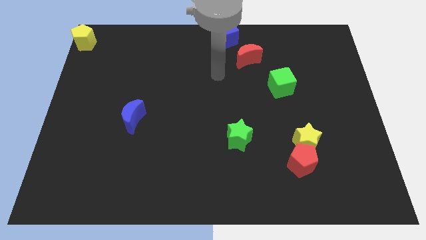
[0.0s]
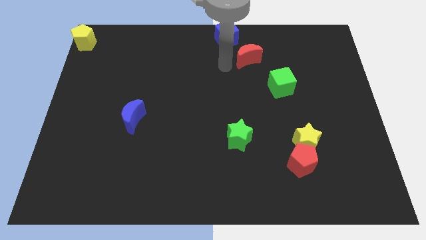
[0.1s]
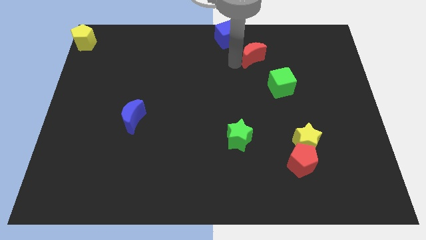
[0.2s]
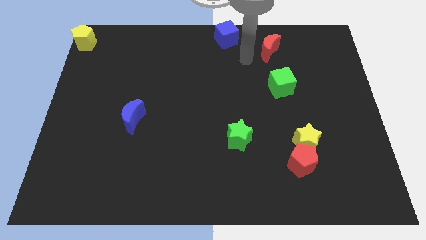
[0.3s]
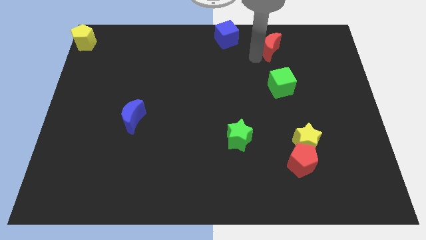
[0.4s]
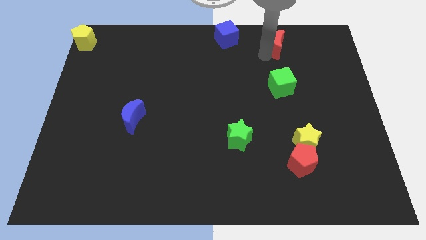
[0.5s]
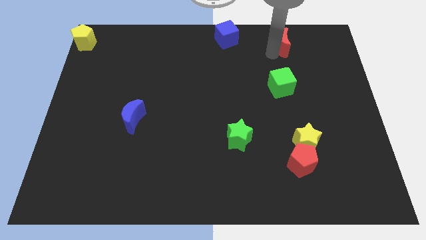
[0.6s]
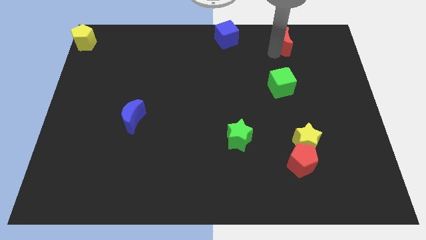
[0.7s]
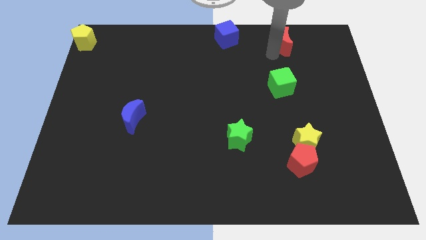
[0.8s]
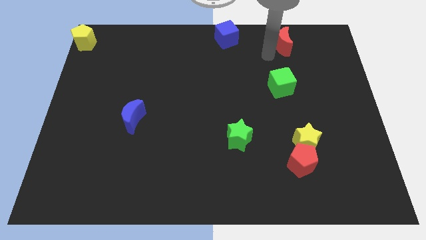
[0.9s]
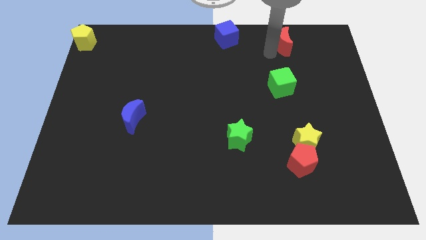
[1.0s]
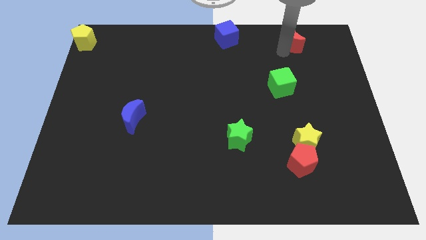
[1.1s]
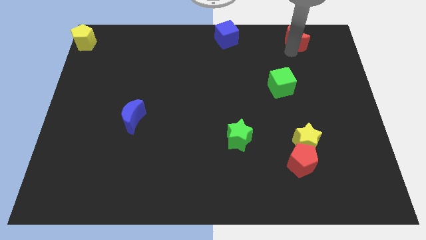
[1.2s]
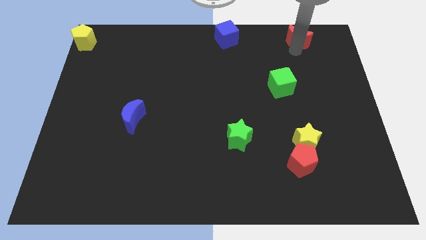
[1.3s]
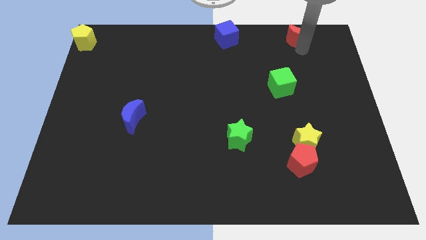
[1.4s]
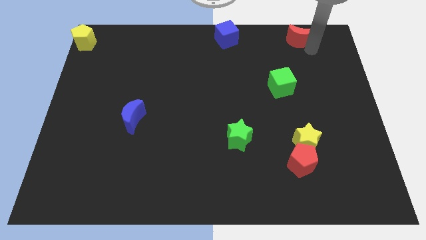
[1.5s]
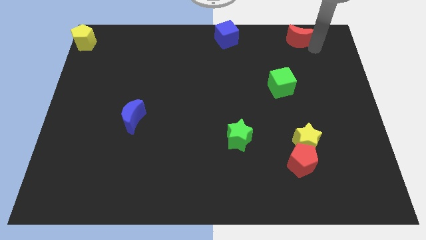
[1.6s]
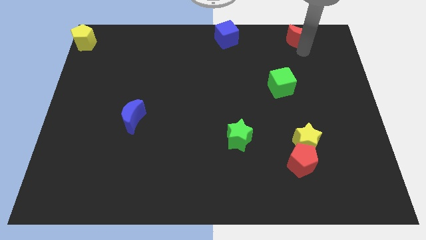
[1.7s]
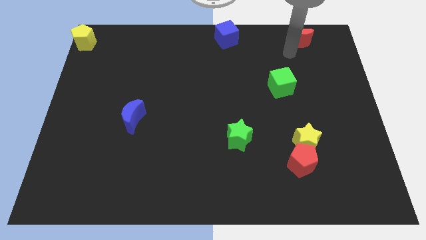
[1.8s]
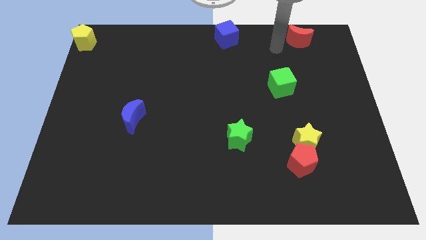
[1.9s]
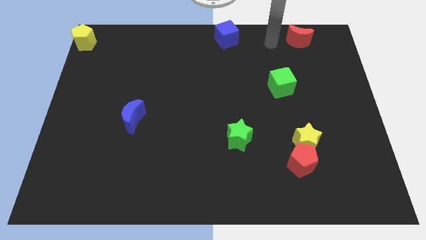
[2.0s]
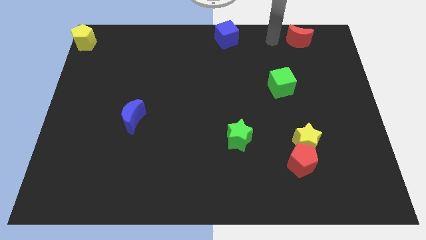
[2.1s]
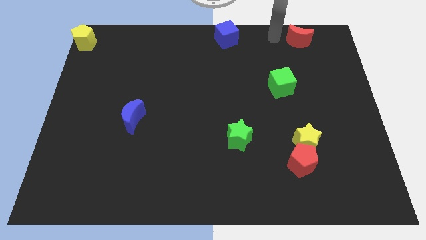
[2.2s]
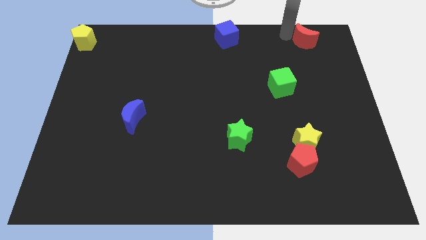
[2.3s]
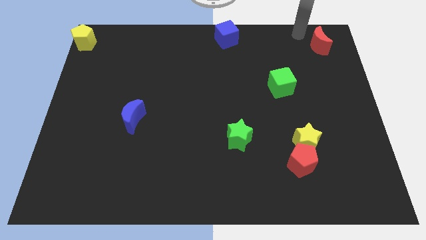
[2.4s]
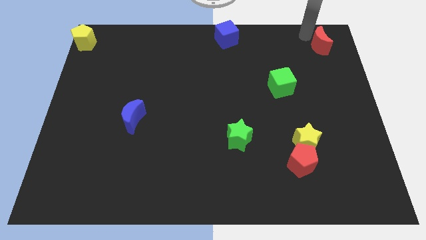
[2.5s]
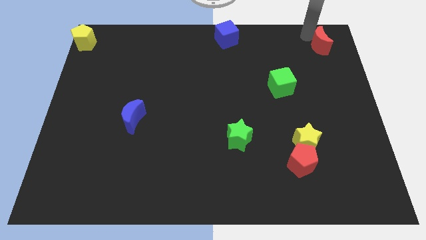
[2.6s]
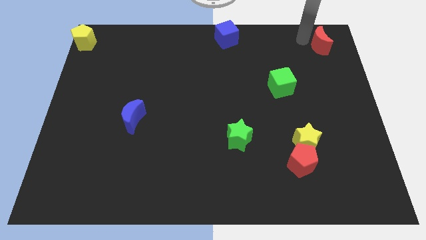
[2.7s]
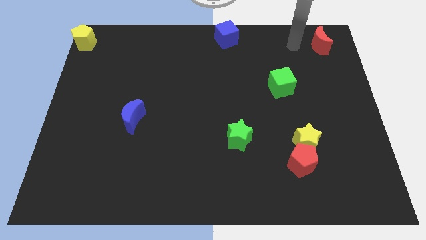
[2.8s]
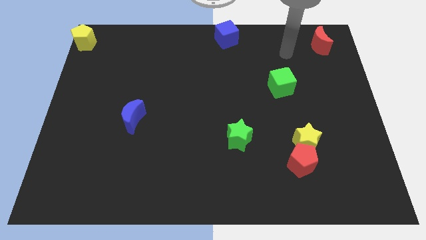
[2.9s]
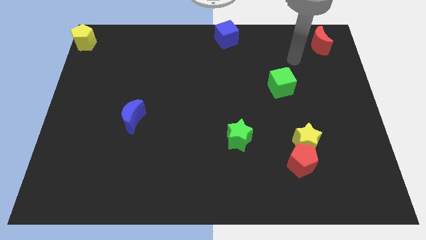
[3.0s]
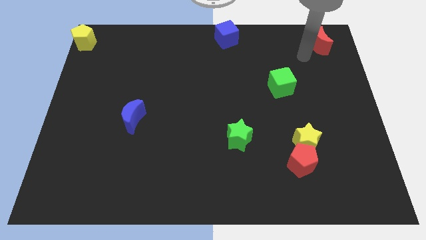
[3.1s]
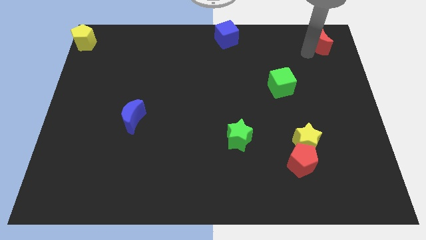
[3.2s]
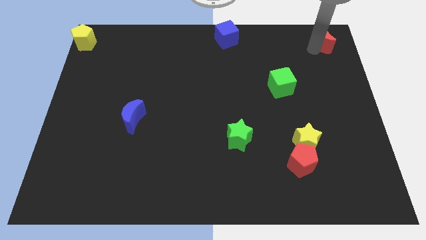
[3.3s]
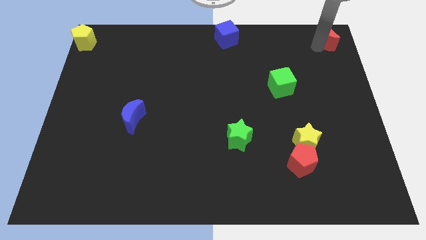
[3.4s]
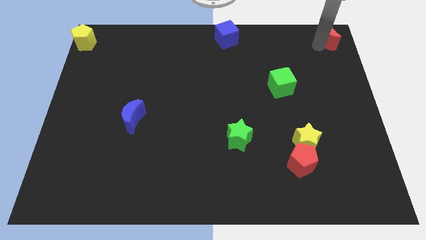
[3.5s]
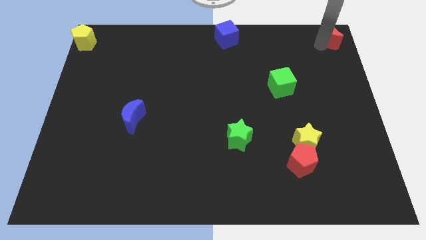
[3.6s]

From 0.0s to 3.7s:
put the red crescent at the top right corner

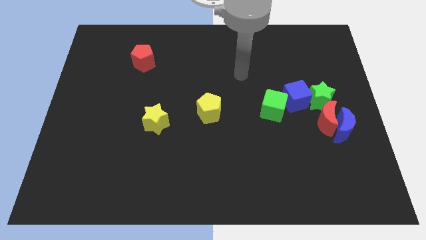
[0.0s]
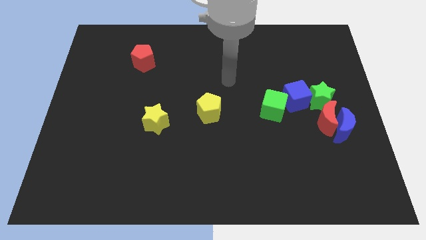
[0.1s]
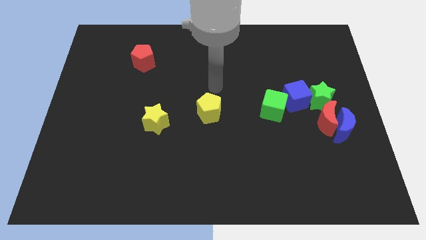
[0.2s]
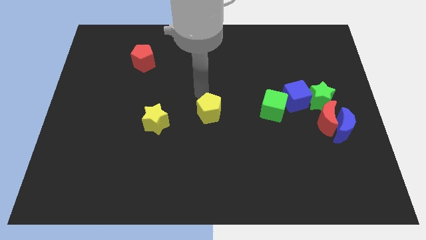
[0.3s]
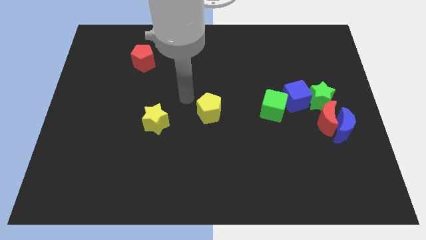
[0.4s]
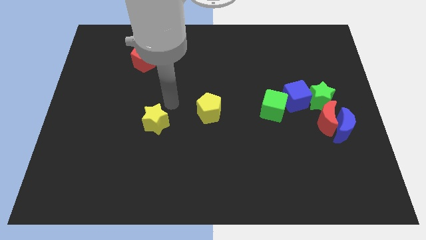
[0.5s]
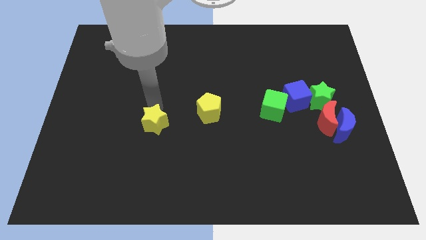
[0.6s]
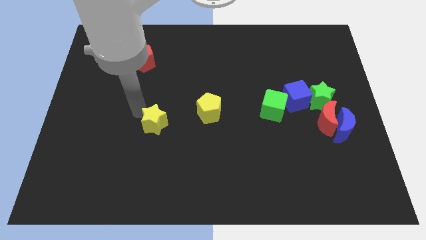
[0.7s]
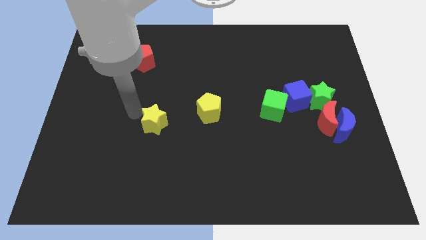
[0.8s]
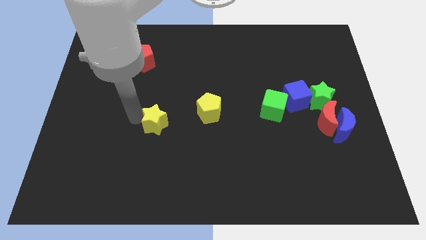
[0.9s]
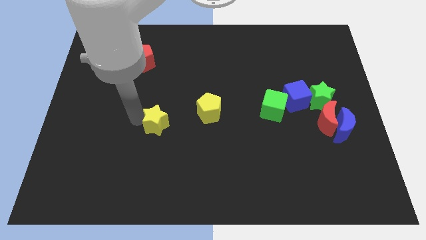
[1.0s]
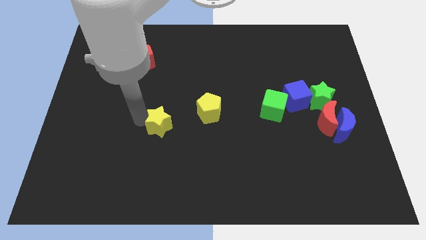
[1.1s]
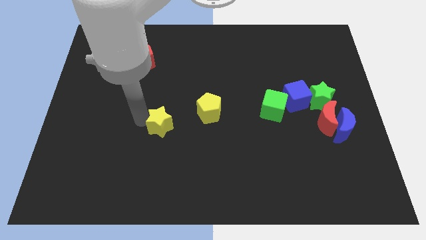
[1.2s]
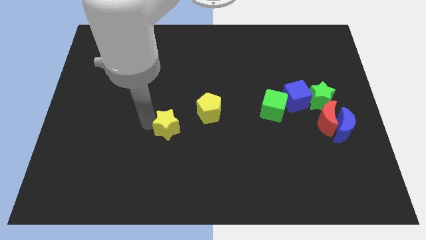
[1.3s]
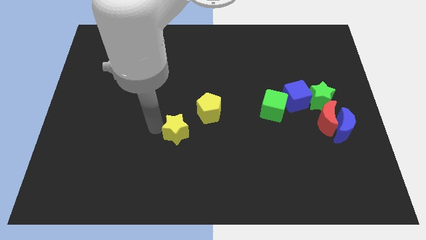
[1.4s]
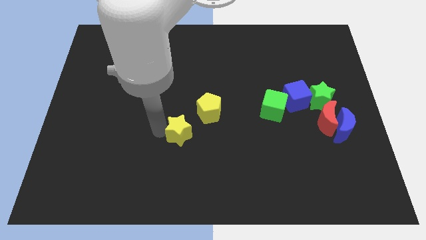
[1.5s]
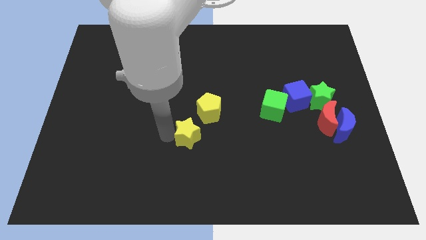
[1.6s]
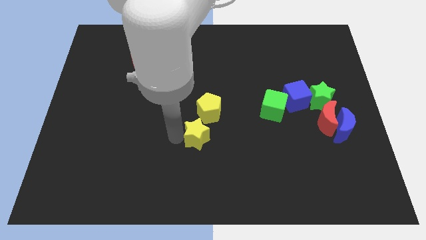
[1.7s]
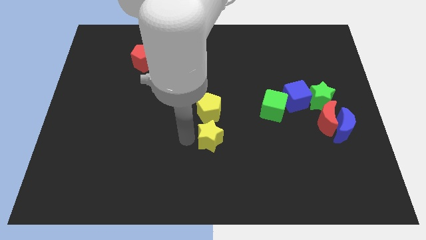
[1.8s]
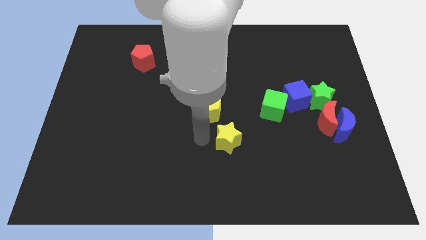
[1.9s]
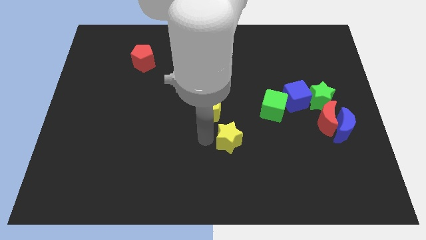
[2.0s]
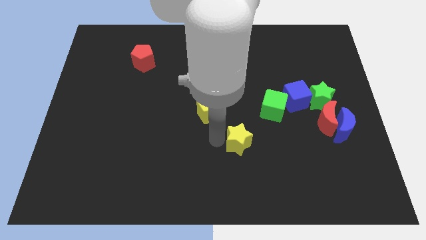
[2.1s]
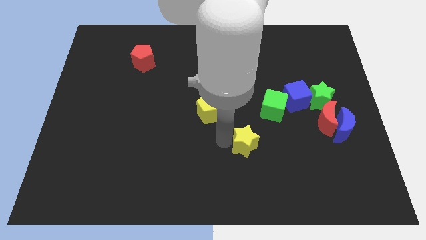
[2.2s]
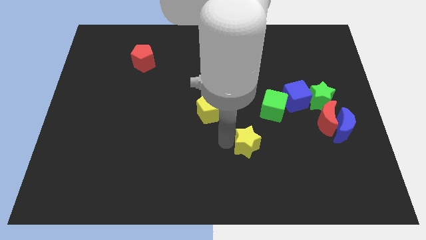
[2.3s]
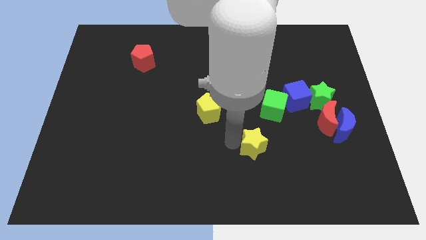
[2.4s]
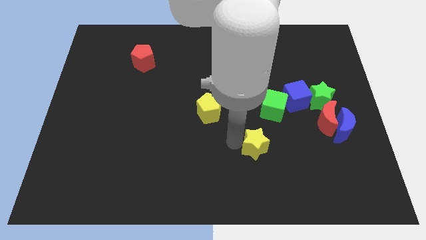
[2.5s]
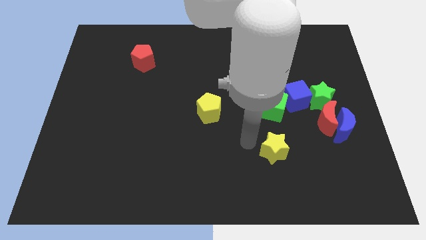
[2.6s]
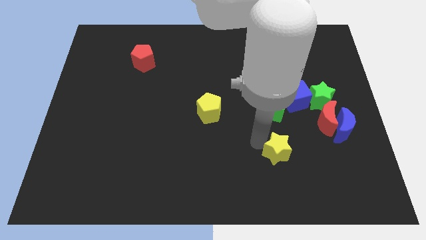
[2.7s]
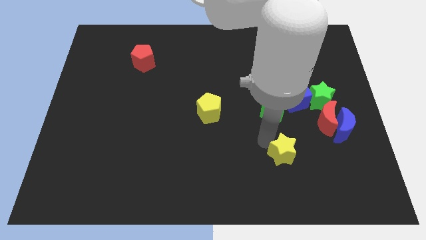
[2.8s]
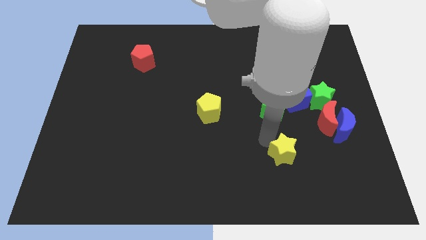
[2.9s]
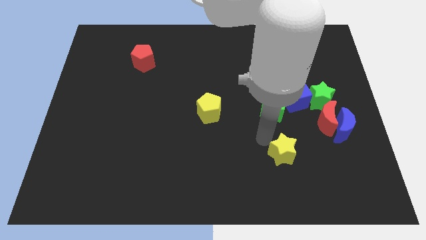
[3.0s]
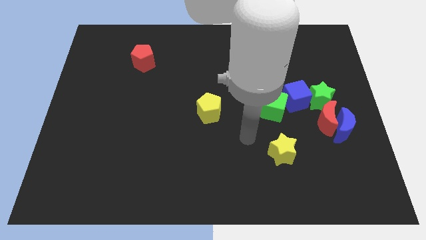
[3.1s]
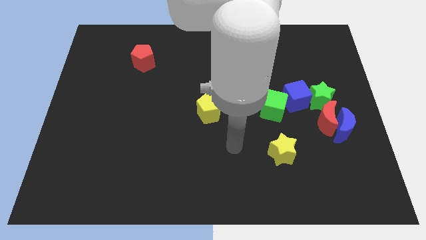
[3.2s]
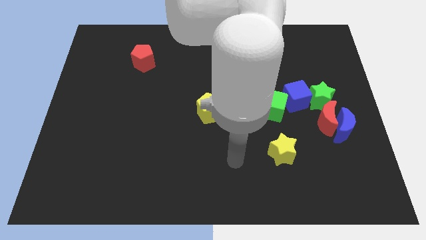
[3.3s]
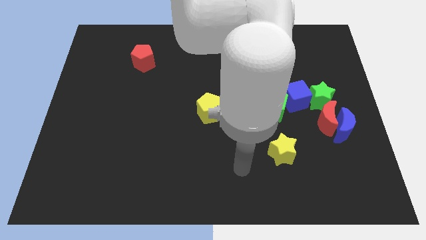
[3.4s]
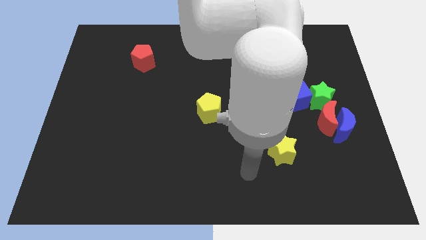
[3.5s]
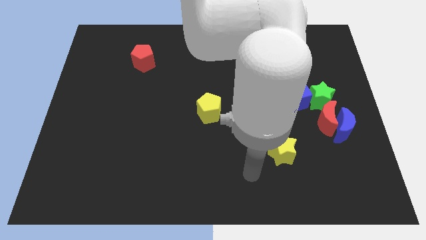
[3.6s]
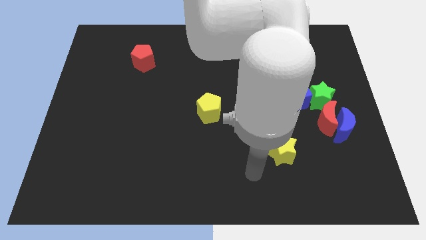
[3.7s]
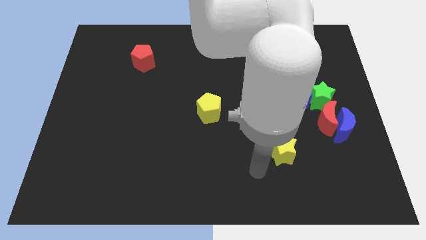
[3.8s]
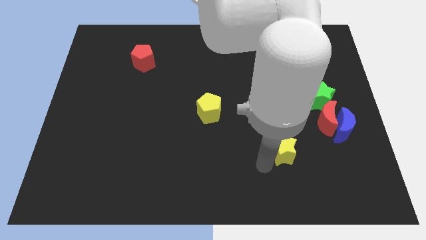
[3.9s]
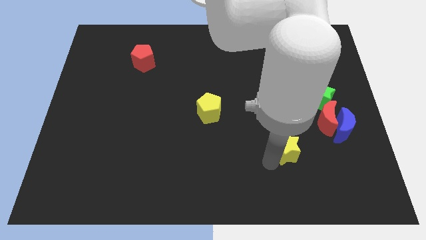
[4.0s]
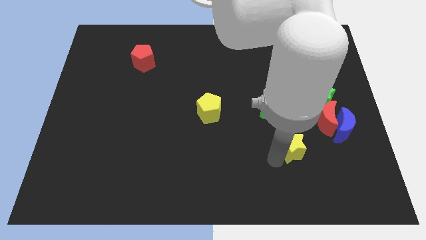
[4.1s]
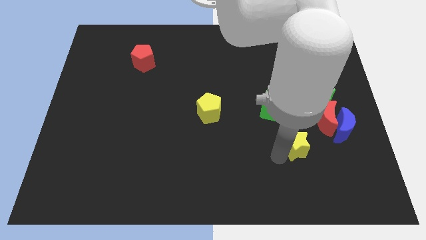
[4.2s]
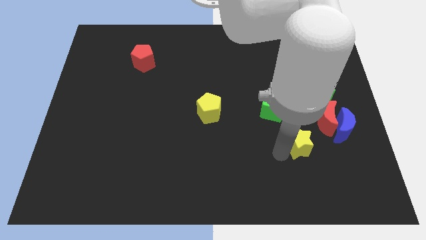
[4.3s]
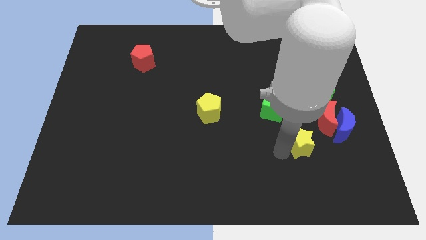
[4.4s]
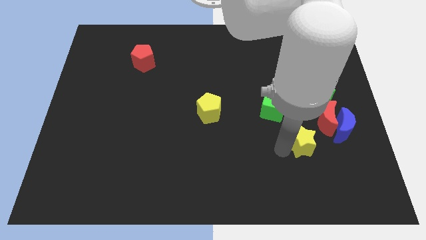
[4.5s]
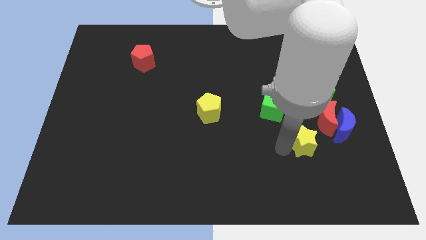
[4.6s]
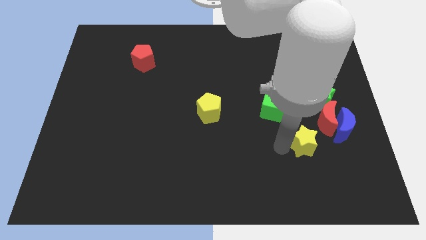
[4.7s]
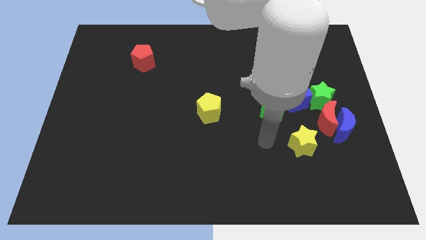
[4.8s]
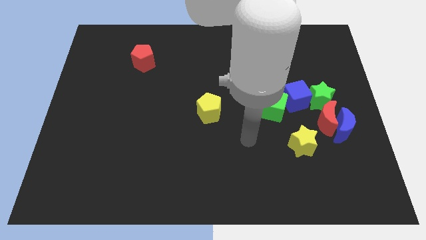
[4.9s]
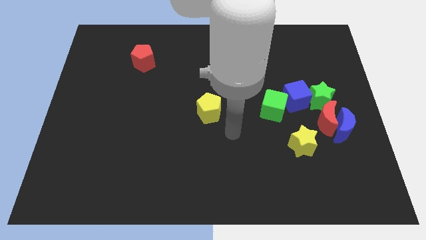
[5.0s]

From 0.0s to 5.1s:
place the yellow star below the blue cube
